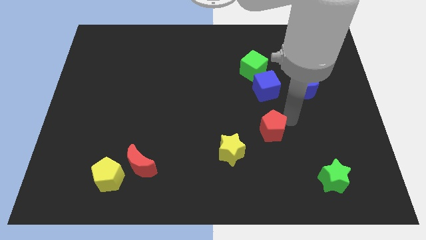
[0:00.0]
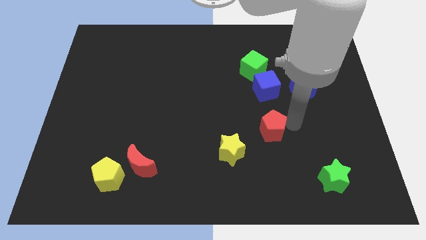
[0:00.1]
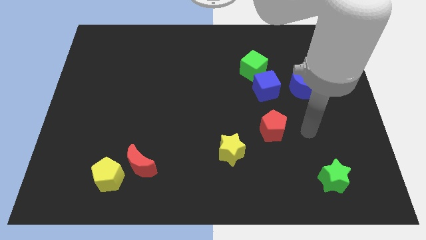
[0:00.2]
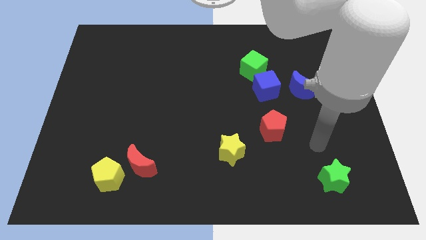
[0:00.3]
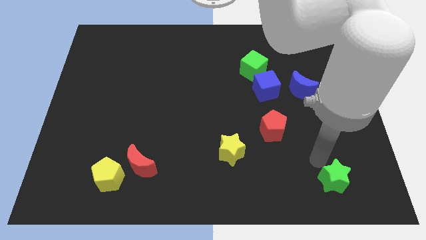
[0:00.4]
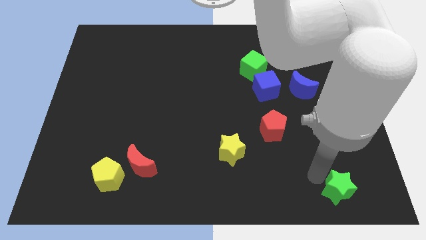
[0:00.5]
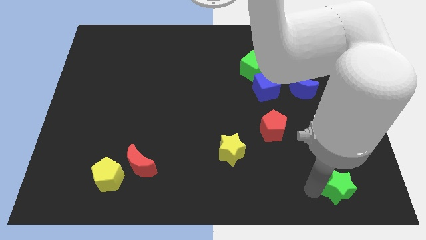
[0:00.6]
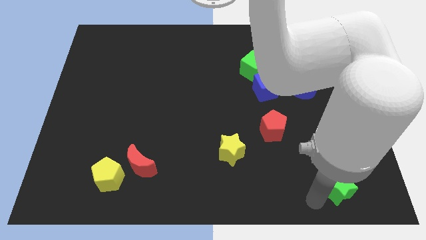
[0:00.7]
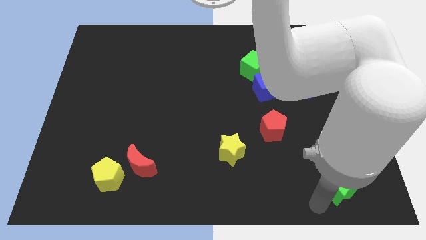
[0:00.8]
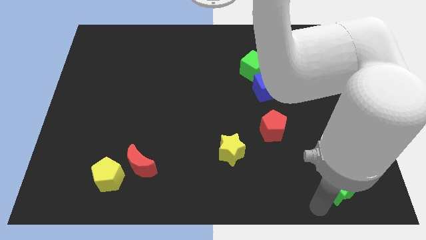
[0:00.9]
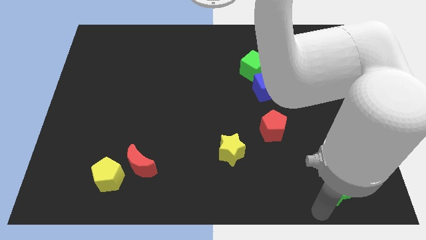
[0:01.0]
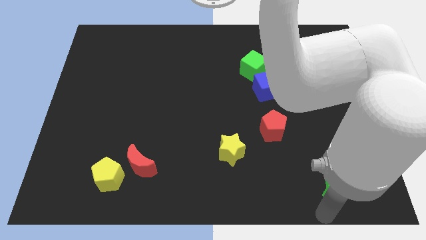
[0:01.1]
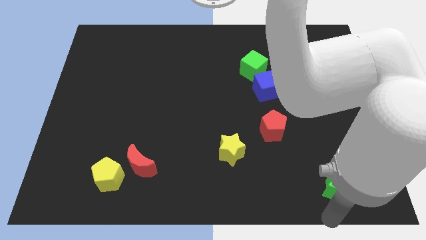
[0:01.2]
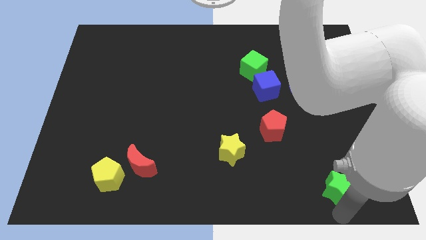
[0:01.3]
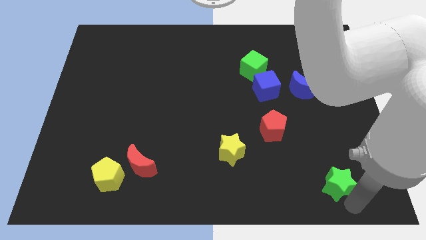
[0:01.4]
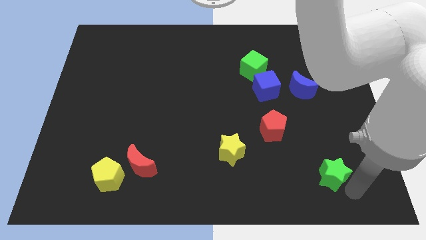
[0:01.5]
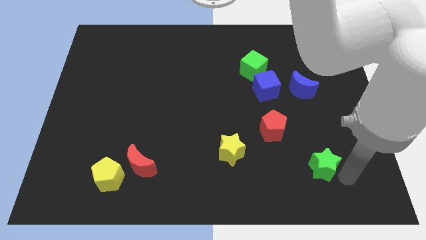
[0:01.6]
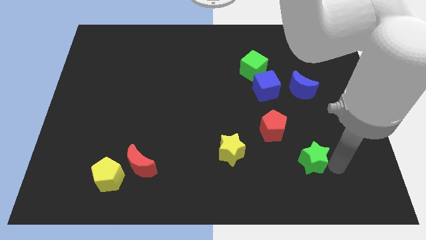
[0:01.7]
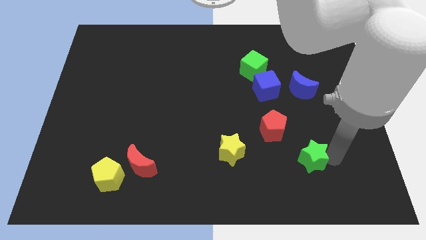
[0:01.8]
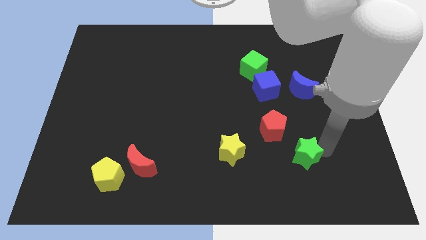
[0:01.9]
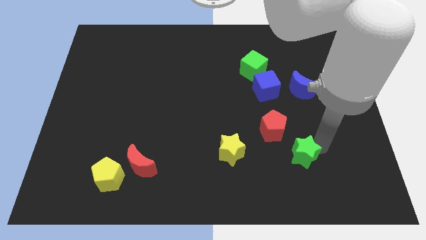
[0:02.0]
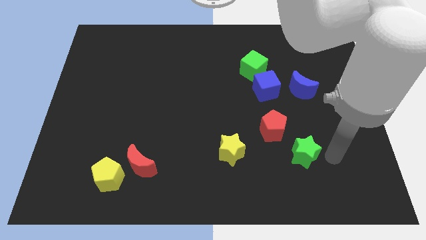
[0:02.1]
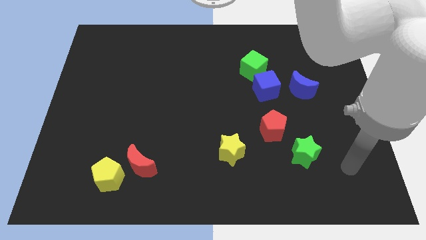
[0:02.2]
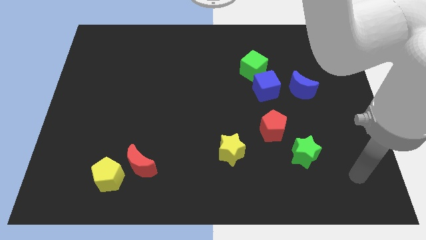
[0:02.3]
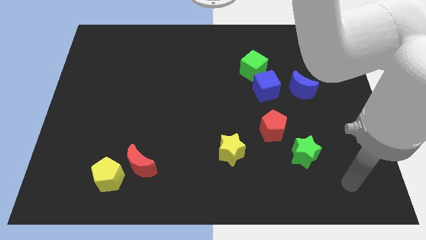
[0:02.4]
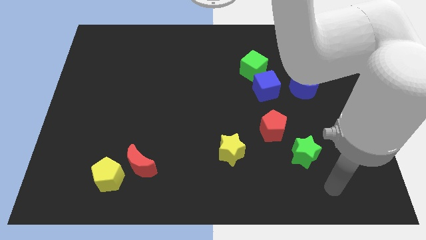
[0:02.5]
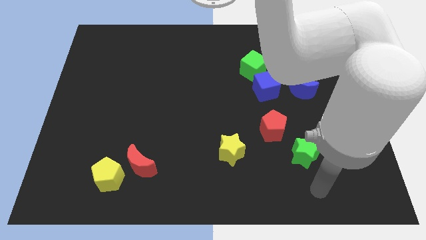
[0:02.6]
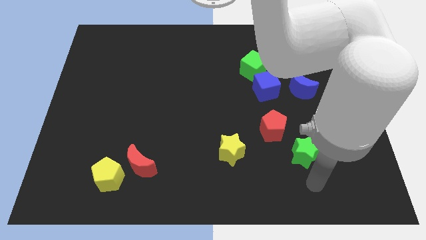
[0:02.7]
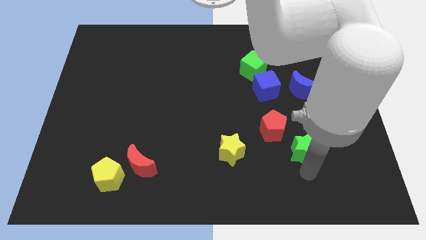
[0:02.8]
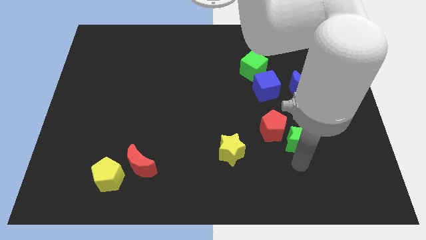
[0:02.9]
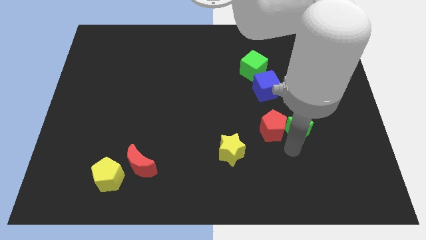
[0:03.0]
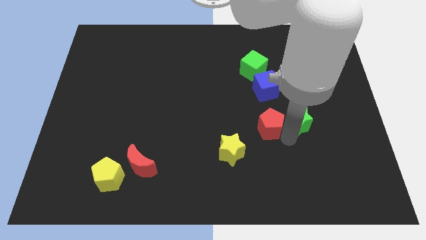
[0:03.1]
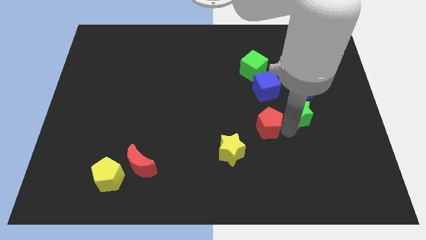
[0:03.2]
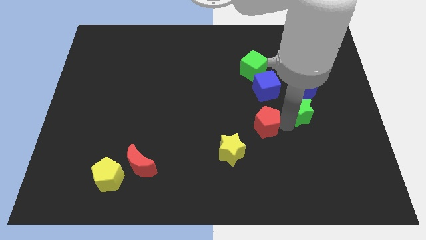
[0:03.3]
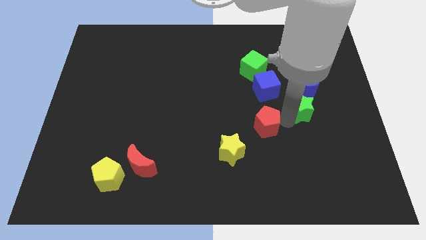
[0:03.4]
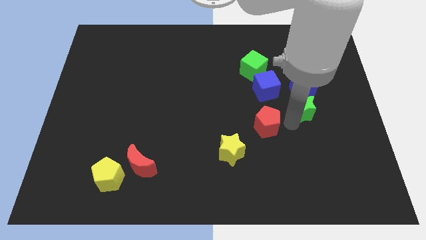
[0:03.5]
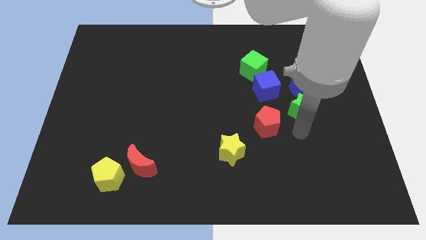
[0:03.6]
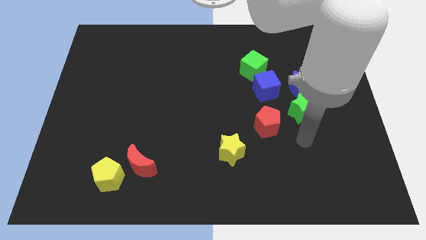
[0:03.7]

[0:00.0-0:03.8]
move the green star into the blue moon

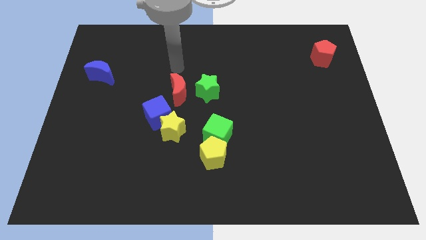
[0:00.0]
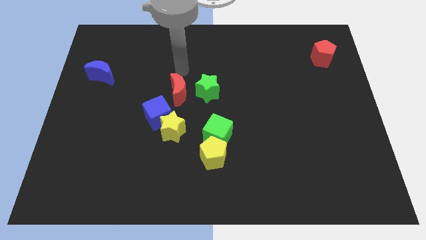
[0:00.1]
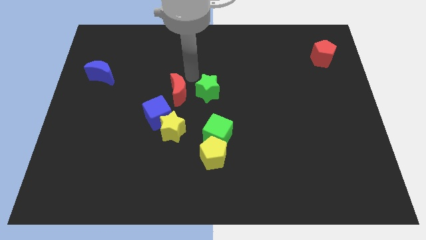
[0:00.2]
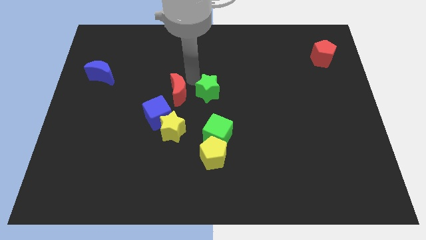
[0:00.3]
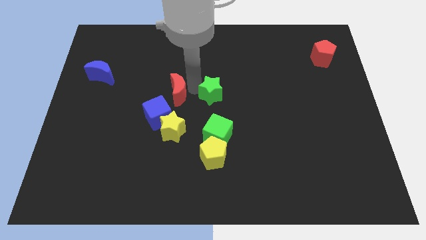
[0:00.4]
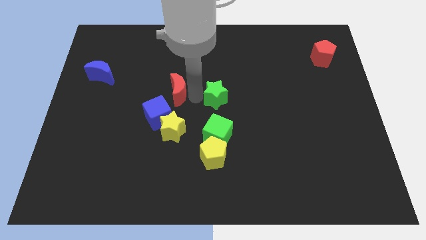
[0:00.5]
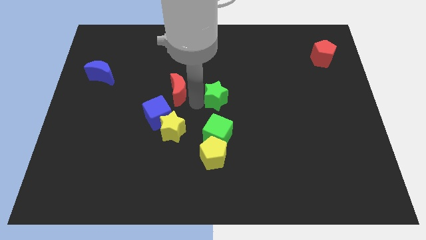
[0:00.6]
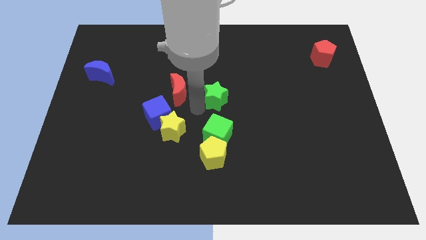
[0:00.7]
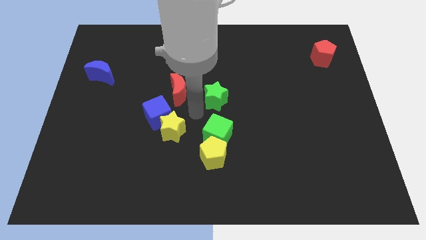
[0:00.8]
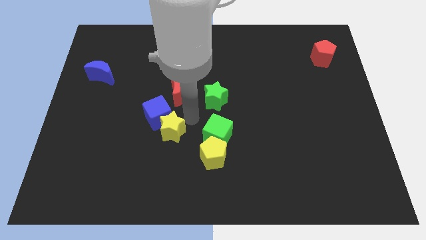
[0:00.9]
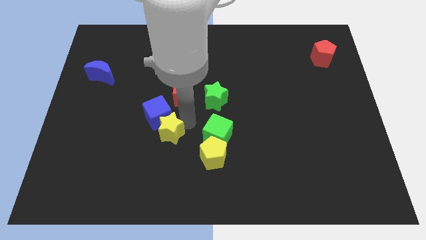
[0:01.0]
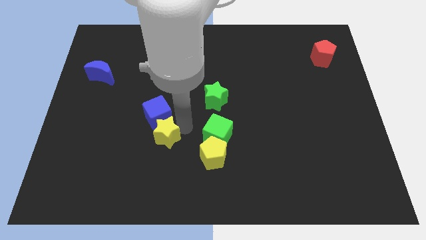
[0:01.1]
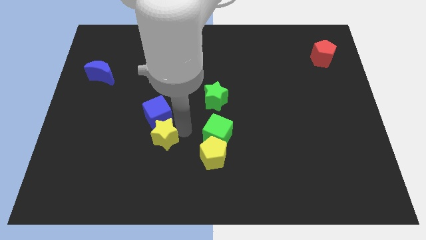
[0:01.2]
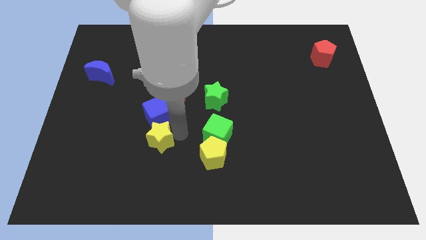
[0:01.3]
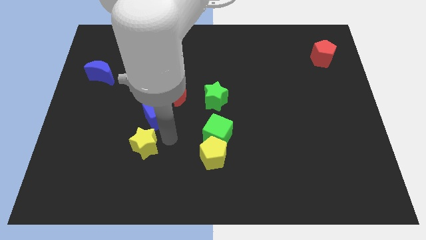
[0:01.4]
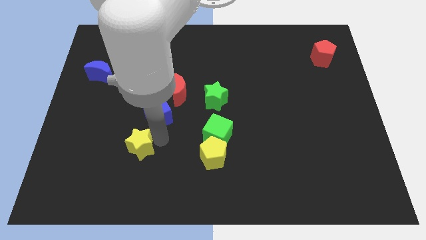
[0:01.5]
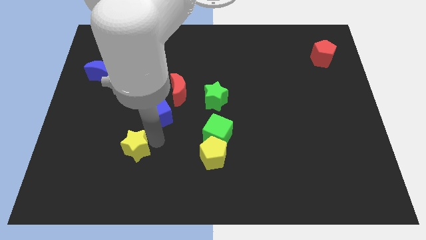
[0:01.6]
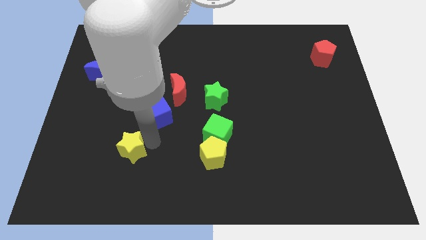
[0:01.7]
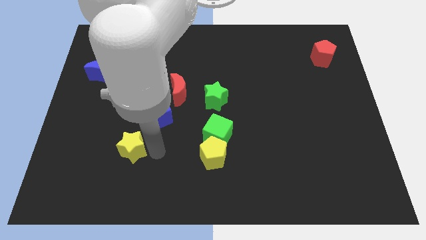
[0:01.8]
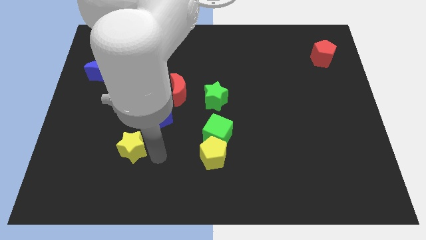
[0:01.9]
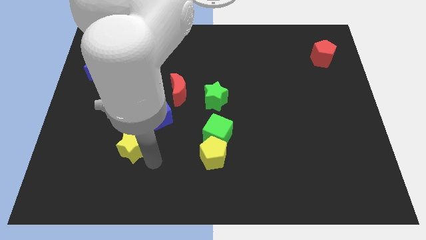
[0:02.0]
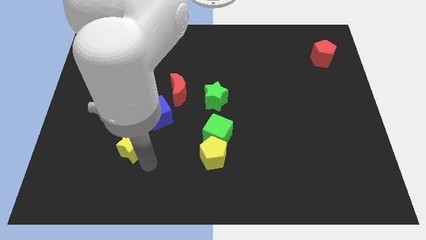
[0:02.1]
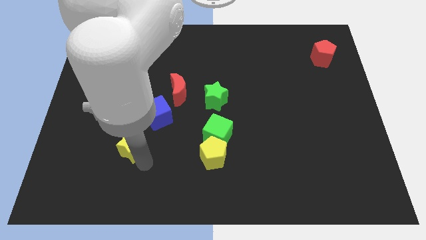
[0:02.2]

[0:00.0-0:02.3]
separate the yellow star from the blue cube

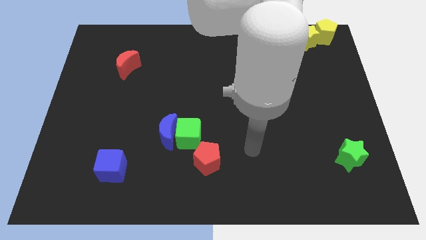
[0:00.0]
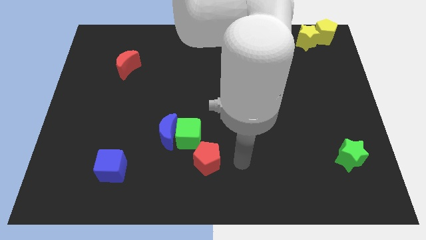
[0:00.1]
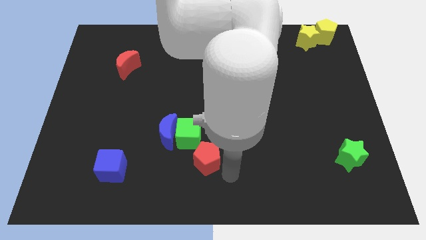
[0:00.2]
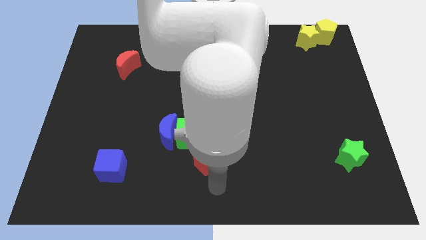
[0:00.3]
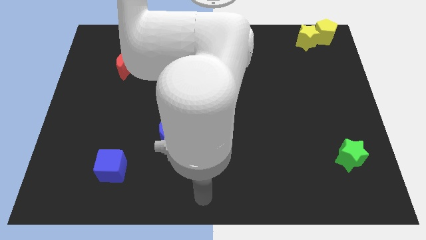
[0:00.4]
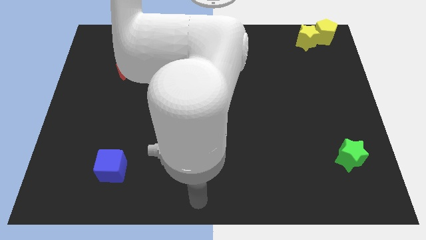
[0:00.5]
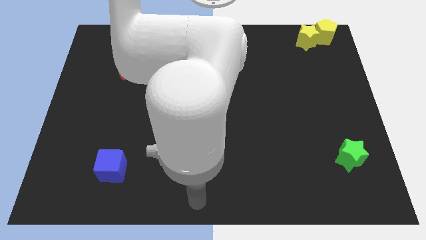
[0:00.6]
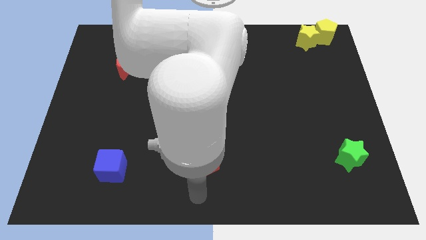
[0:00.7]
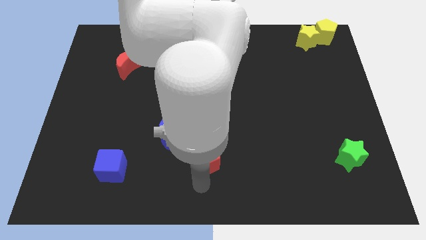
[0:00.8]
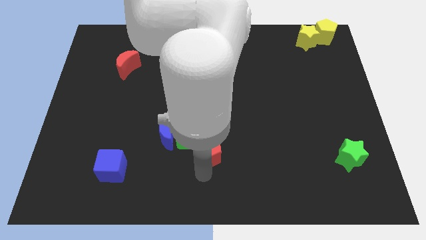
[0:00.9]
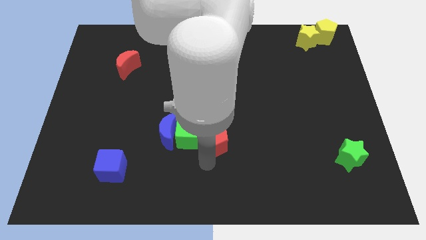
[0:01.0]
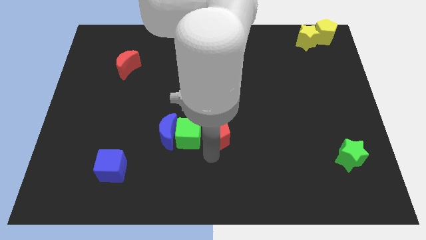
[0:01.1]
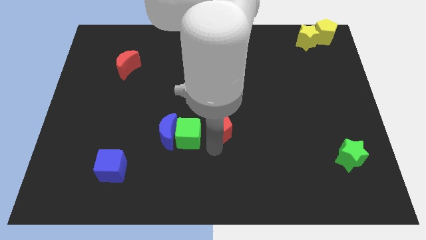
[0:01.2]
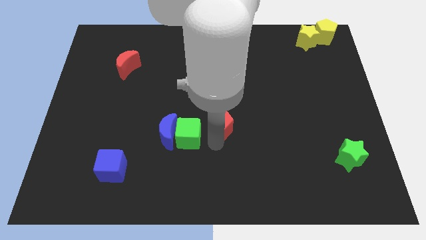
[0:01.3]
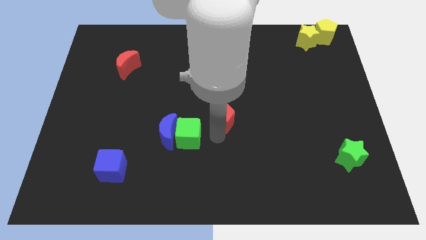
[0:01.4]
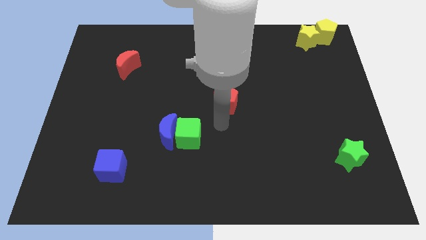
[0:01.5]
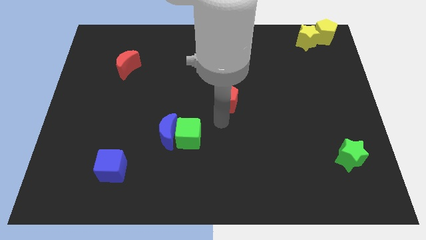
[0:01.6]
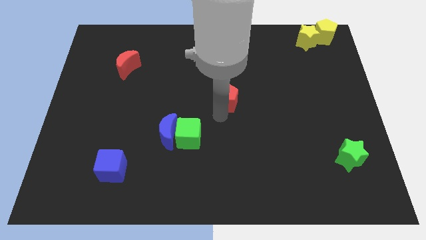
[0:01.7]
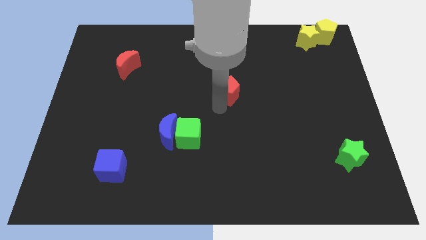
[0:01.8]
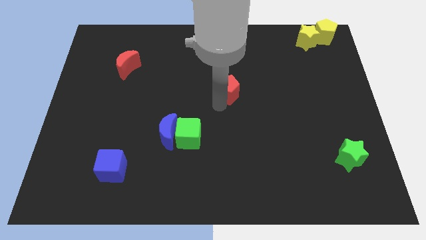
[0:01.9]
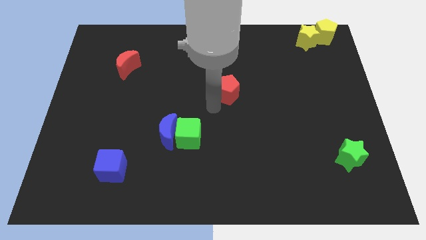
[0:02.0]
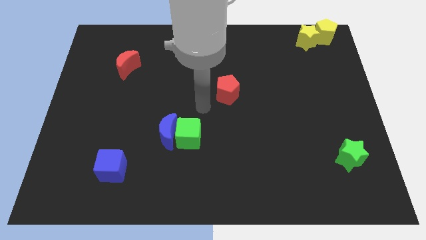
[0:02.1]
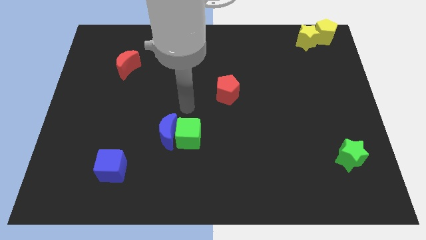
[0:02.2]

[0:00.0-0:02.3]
move the red pentagon to the center of the board

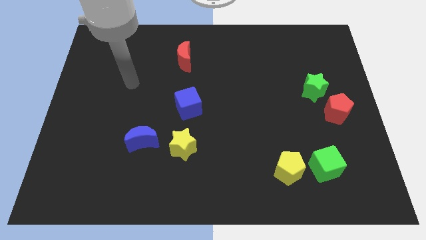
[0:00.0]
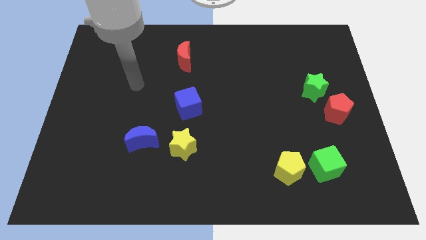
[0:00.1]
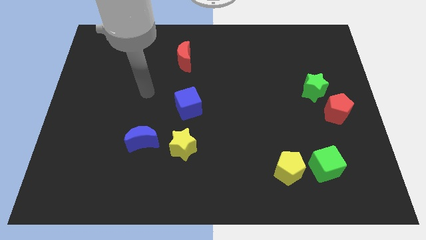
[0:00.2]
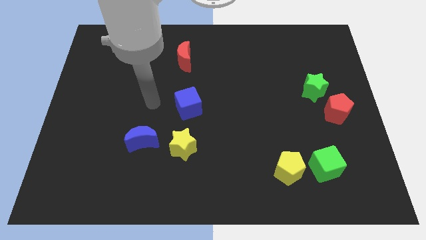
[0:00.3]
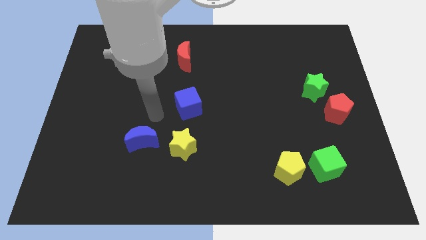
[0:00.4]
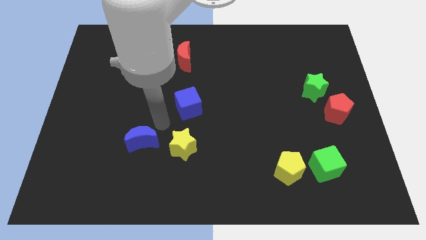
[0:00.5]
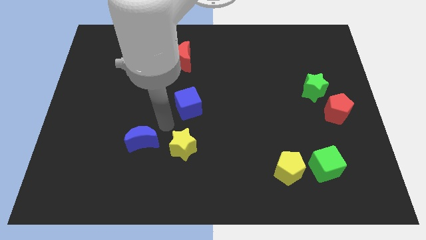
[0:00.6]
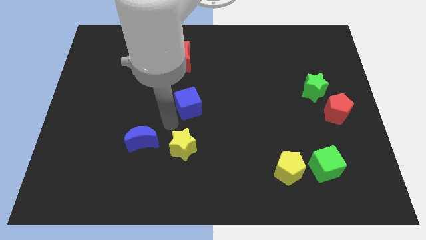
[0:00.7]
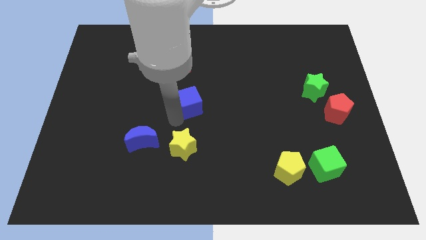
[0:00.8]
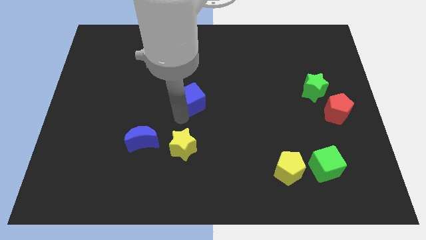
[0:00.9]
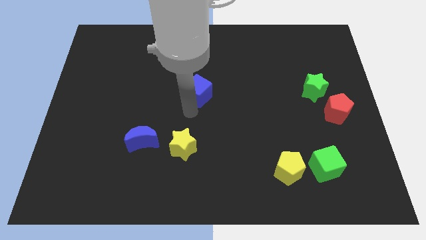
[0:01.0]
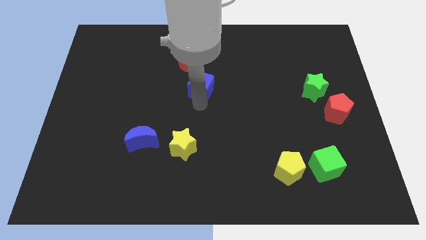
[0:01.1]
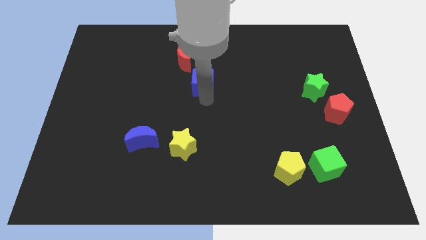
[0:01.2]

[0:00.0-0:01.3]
place the blue cube below the red crescent
